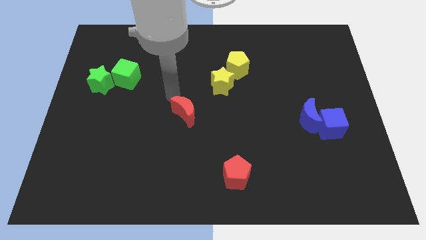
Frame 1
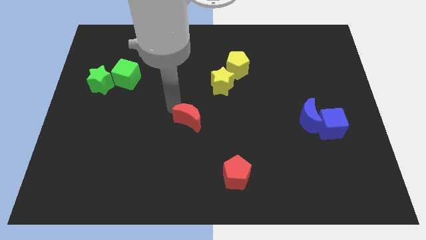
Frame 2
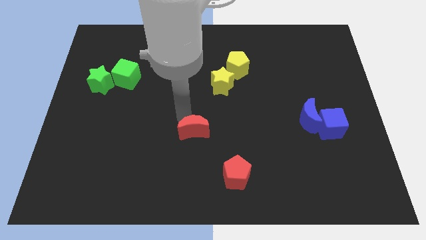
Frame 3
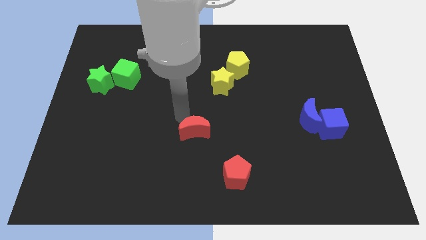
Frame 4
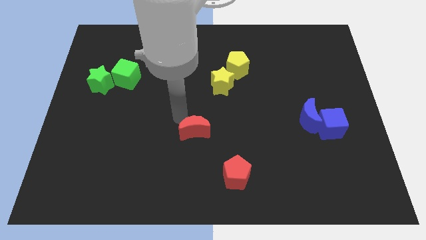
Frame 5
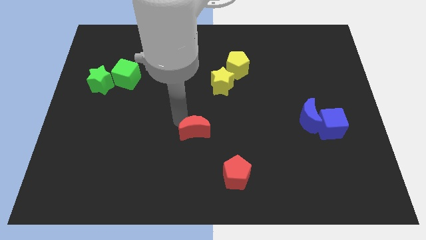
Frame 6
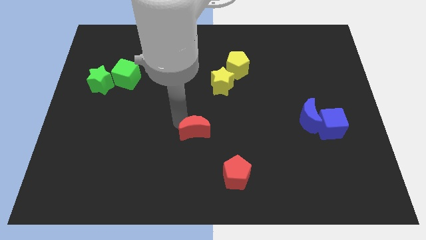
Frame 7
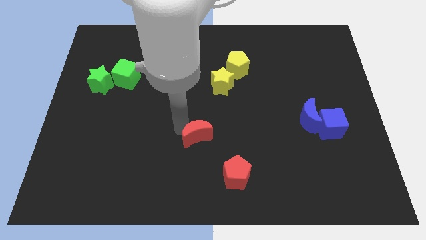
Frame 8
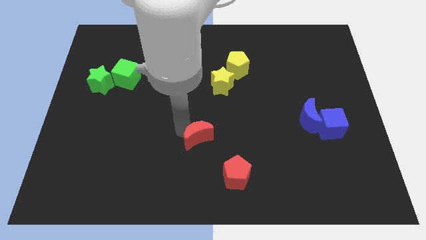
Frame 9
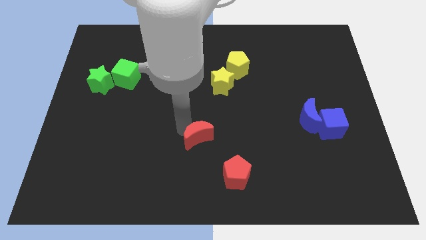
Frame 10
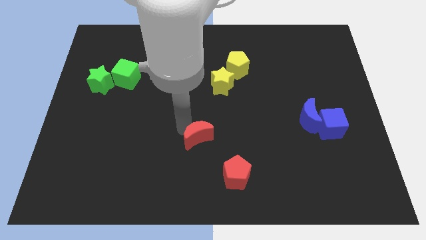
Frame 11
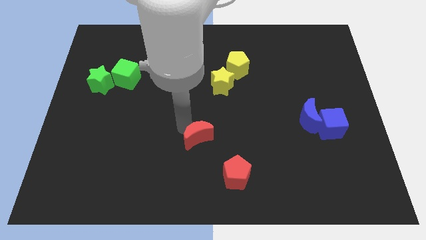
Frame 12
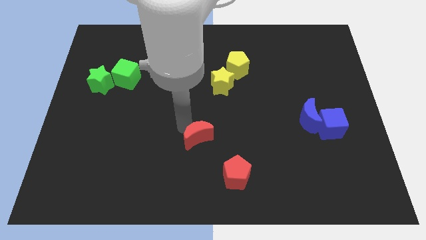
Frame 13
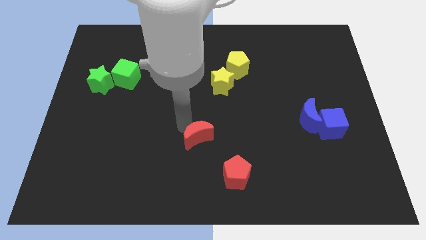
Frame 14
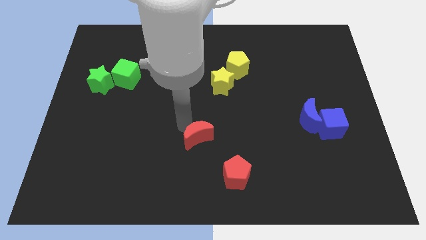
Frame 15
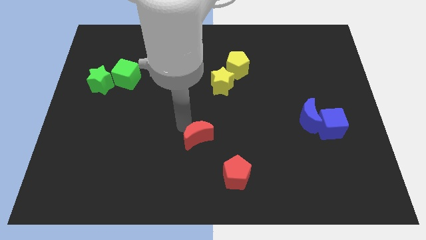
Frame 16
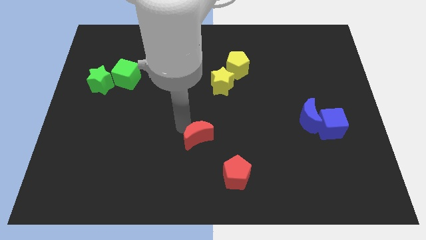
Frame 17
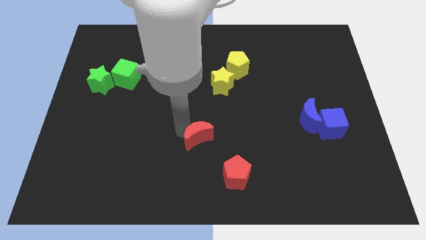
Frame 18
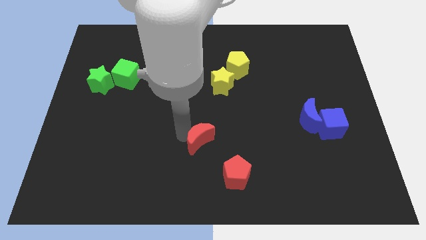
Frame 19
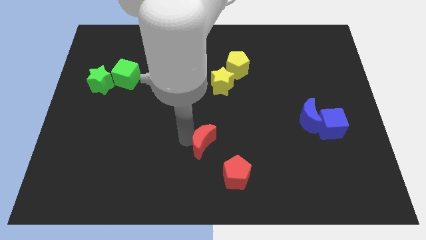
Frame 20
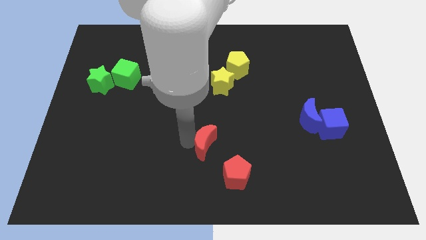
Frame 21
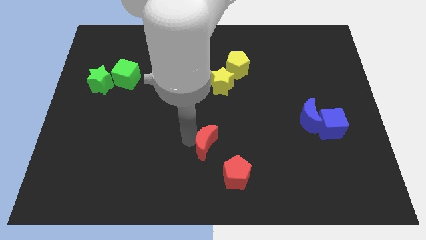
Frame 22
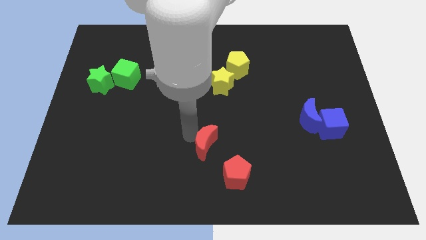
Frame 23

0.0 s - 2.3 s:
move the red crescent above the red pentagon

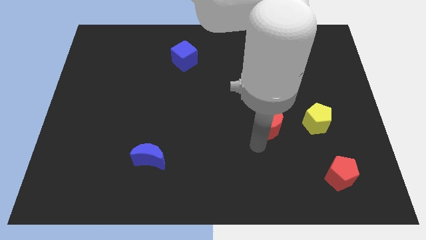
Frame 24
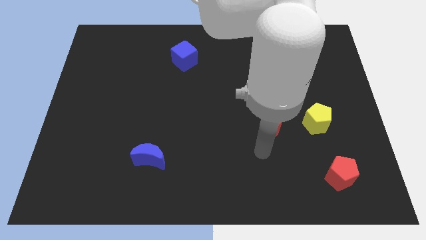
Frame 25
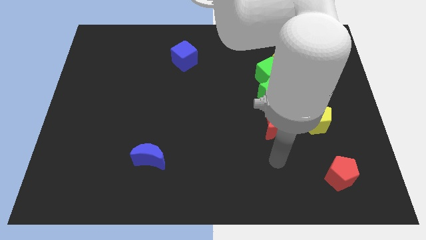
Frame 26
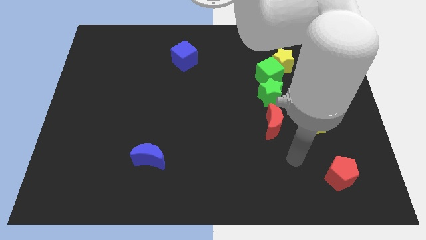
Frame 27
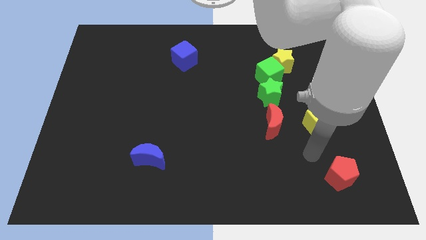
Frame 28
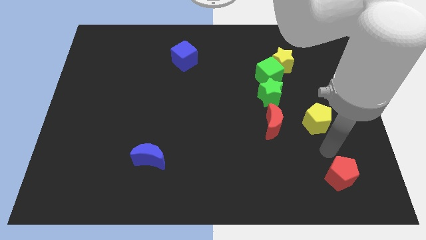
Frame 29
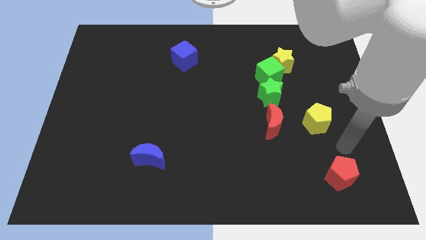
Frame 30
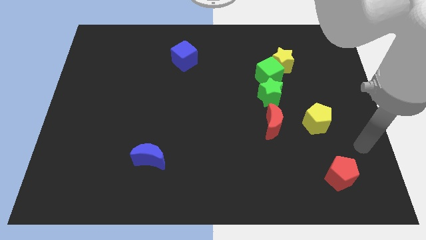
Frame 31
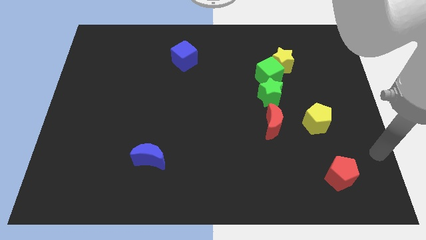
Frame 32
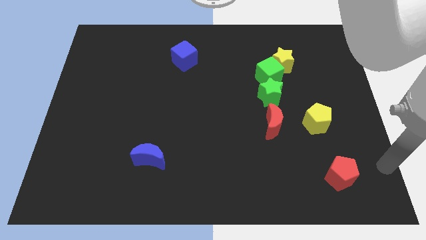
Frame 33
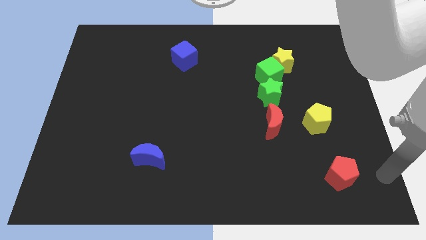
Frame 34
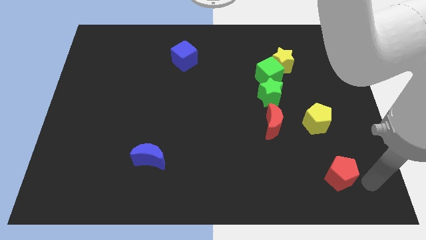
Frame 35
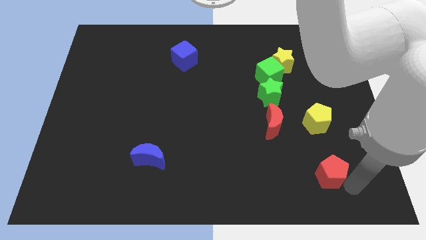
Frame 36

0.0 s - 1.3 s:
touch the bottom of red pentagon

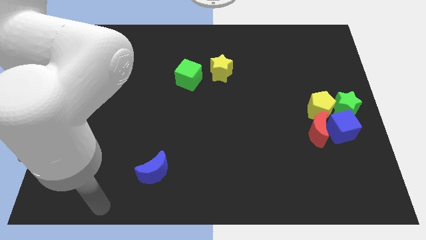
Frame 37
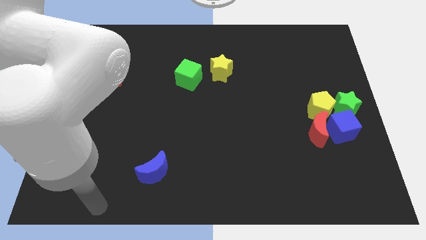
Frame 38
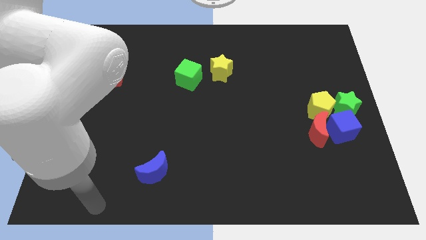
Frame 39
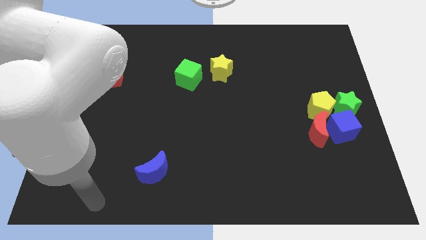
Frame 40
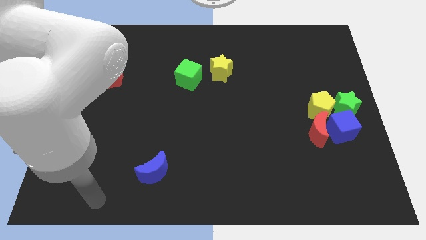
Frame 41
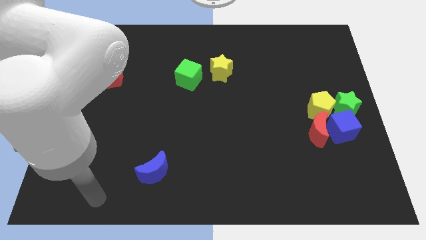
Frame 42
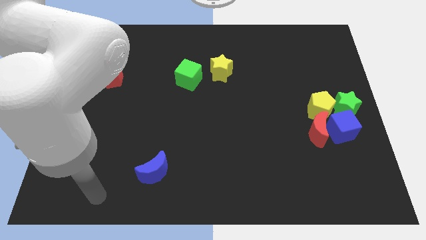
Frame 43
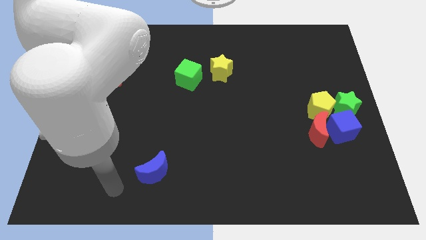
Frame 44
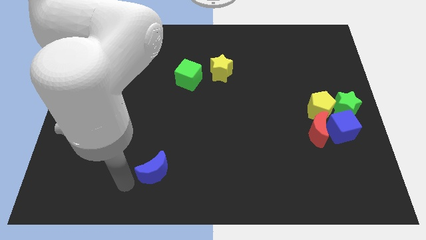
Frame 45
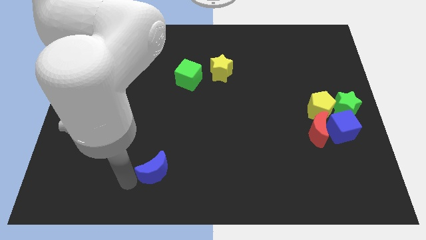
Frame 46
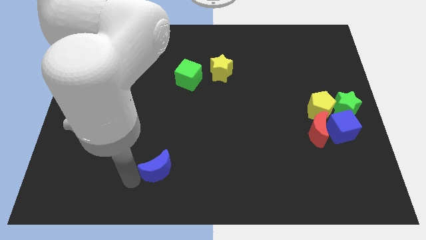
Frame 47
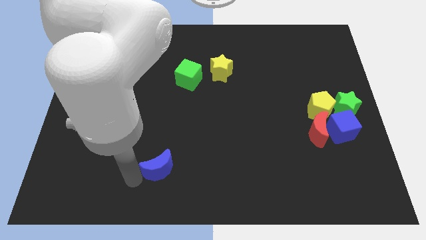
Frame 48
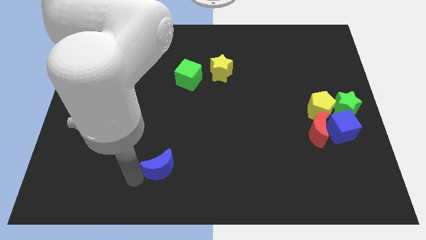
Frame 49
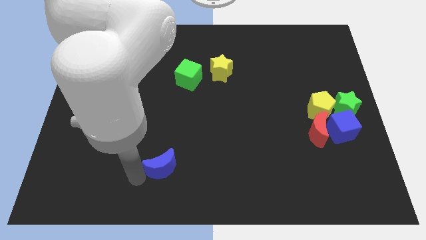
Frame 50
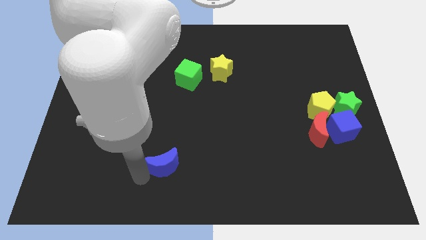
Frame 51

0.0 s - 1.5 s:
move the blue moon slightly up

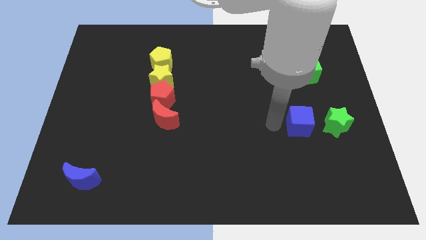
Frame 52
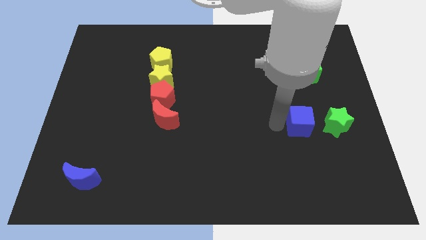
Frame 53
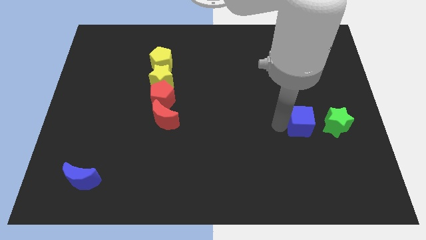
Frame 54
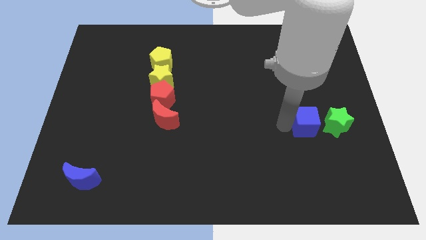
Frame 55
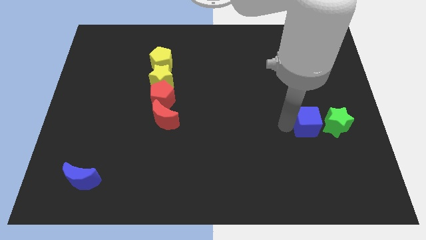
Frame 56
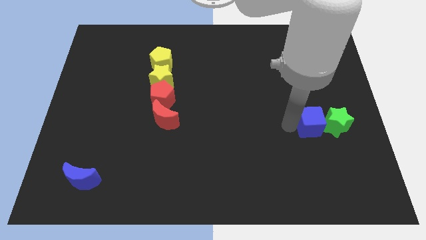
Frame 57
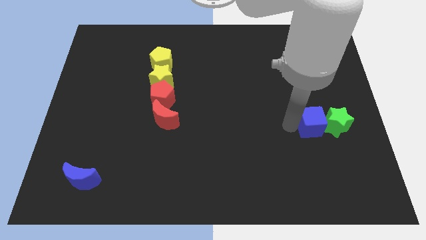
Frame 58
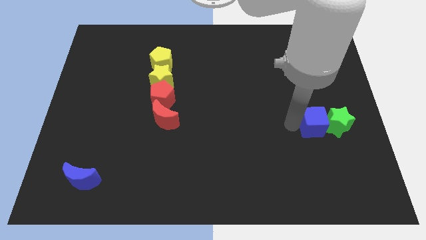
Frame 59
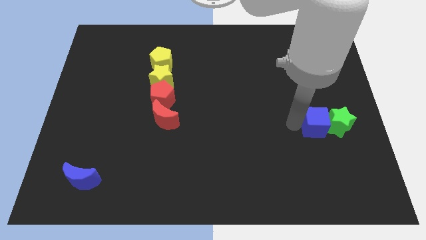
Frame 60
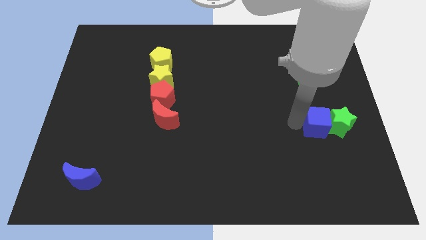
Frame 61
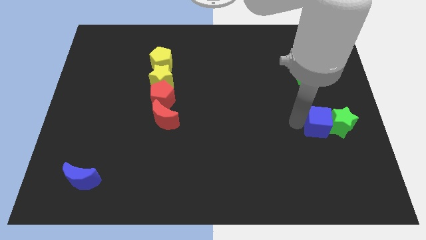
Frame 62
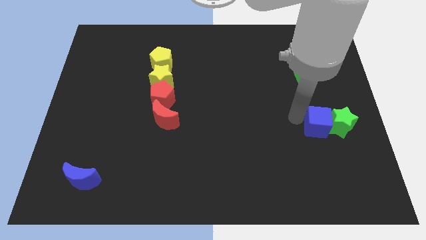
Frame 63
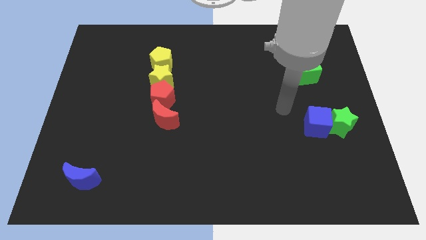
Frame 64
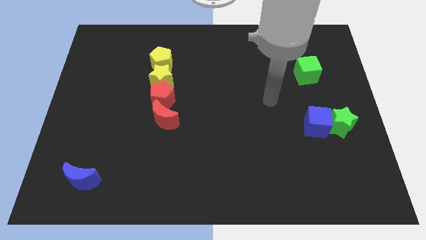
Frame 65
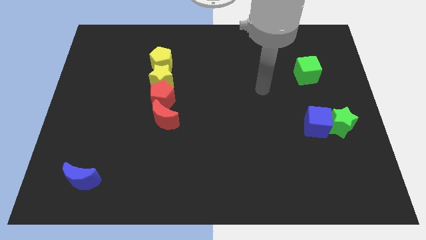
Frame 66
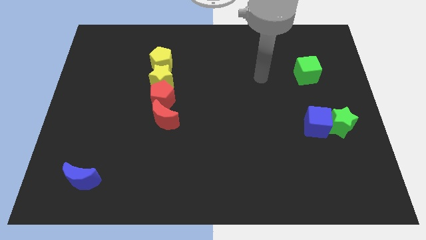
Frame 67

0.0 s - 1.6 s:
put the blue cube into the green star

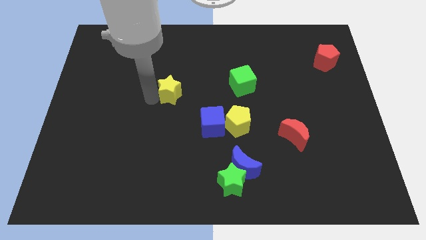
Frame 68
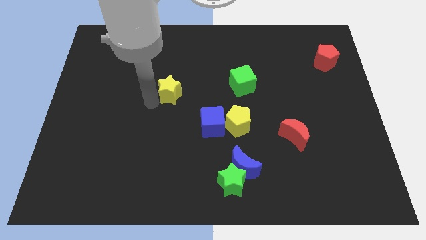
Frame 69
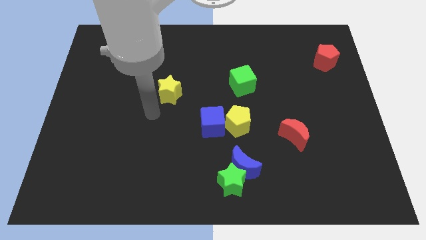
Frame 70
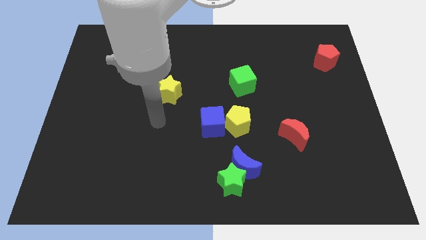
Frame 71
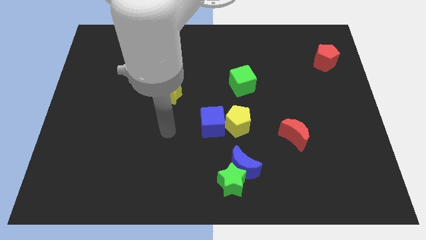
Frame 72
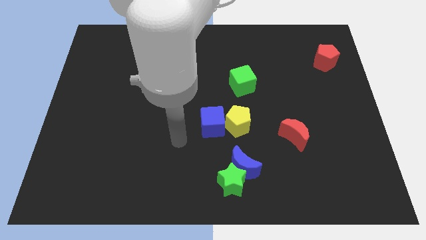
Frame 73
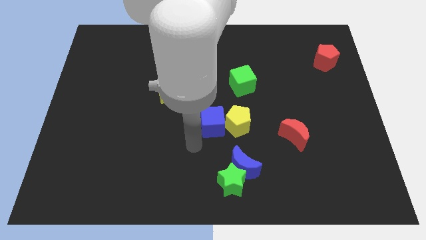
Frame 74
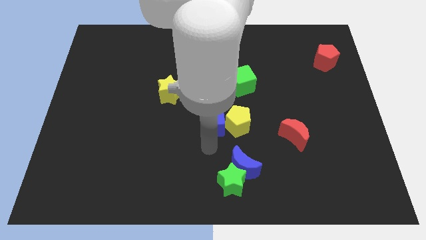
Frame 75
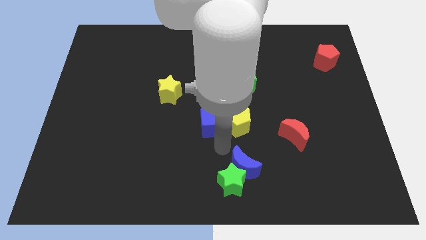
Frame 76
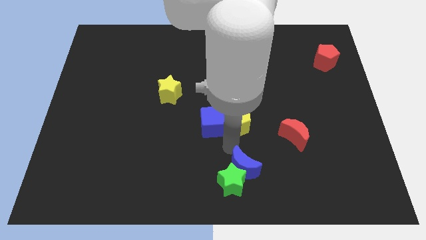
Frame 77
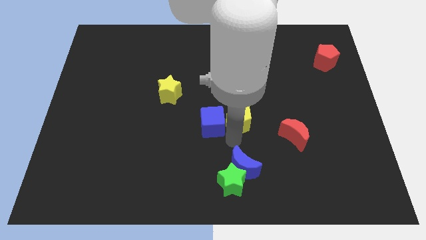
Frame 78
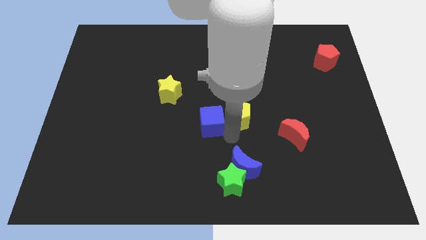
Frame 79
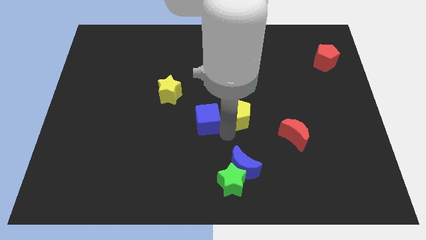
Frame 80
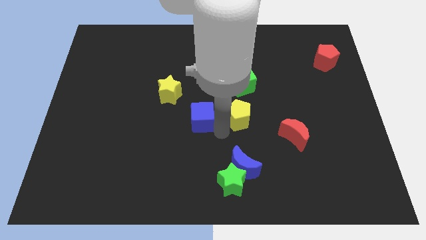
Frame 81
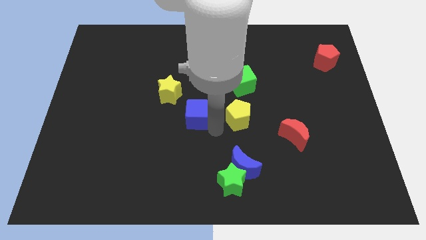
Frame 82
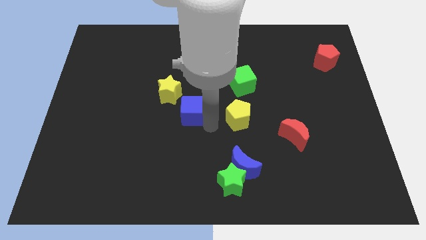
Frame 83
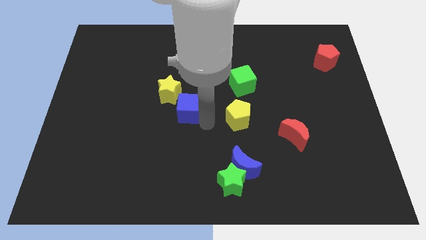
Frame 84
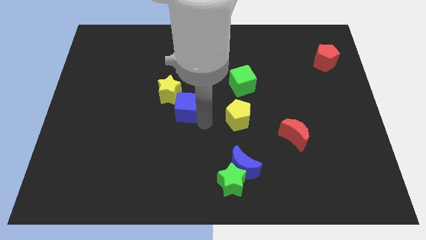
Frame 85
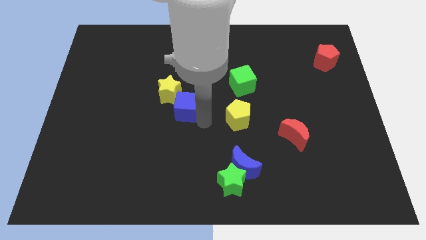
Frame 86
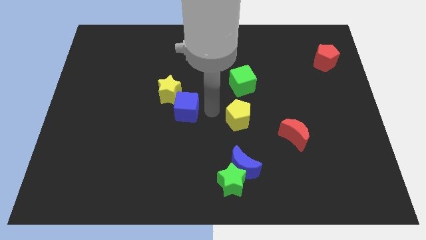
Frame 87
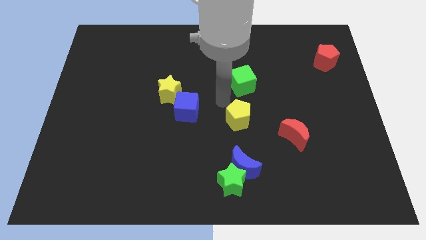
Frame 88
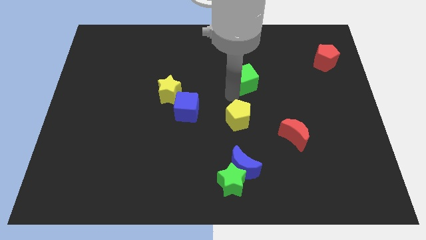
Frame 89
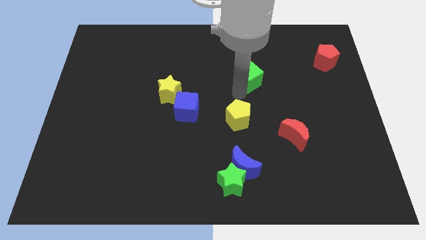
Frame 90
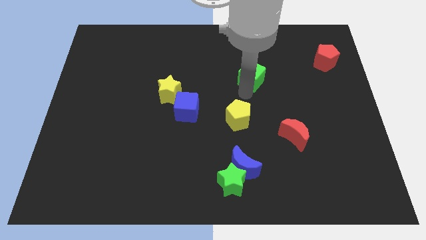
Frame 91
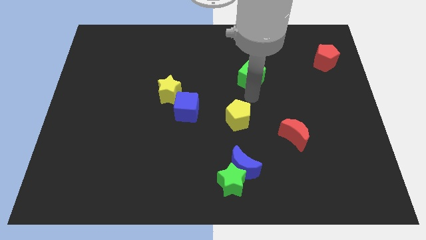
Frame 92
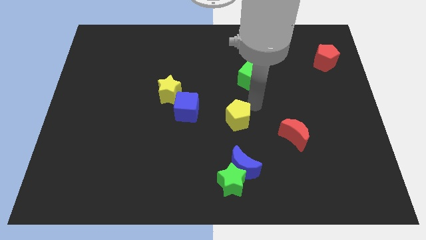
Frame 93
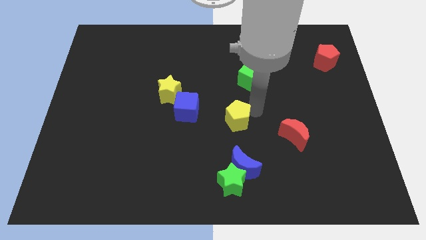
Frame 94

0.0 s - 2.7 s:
slightly push the green cube up
